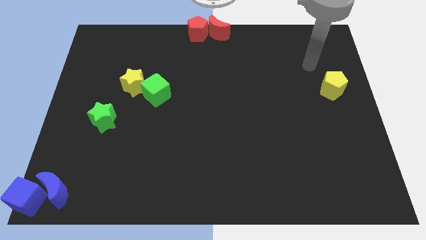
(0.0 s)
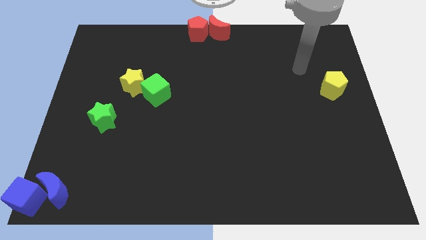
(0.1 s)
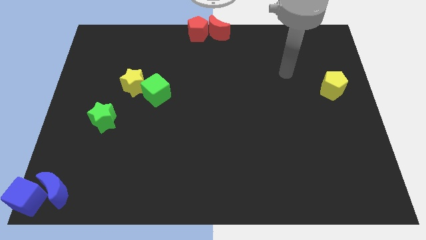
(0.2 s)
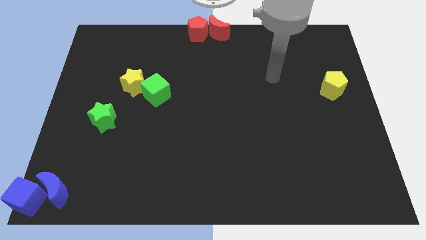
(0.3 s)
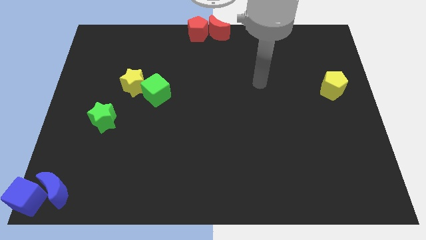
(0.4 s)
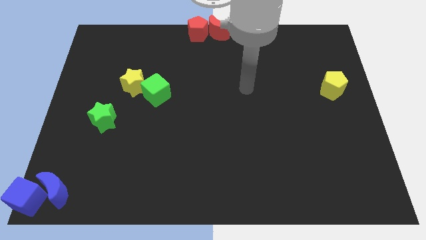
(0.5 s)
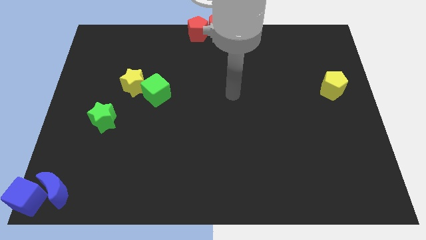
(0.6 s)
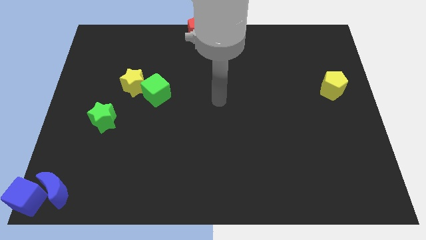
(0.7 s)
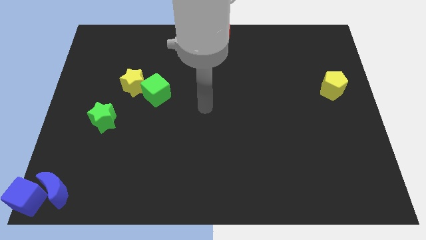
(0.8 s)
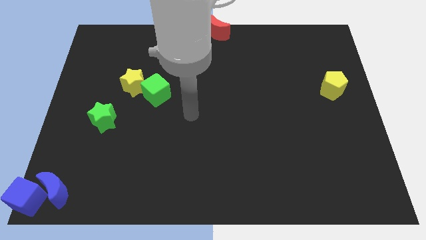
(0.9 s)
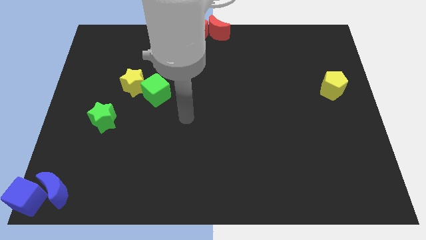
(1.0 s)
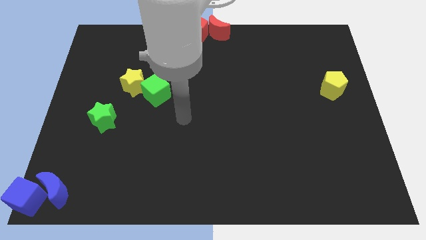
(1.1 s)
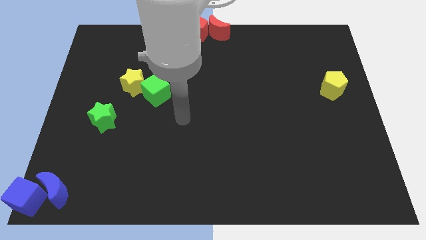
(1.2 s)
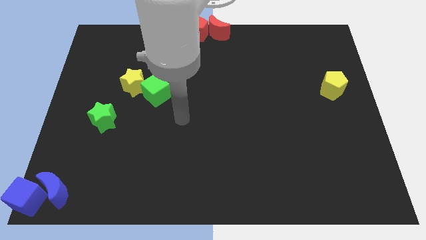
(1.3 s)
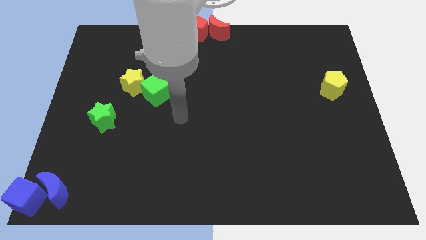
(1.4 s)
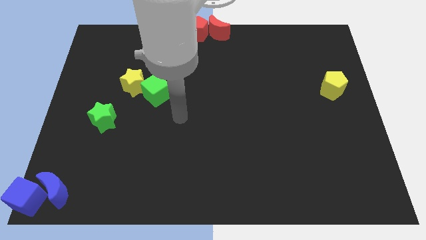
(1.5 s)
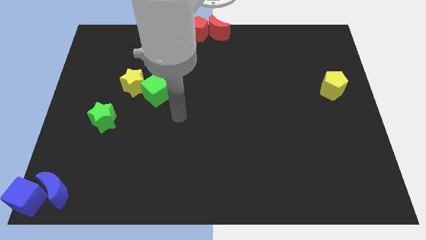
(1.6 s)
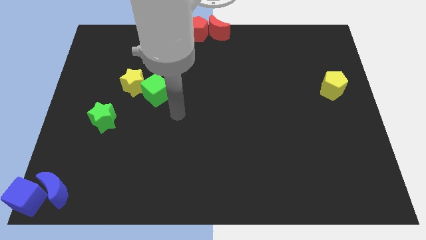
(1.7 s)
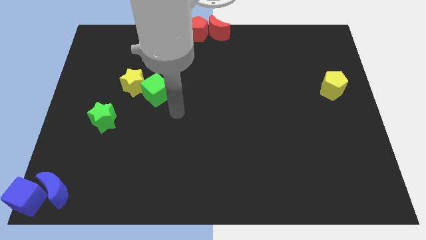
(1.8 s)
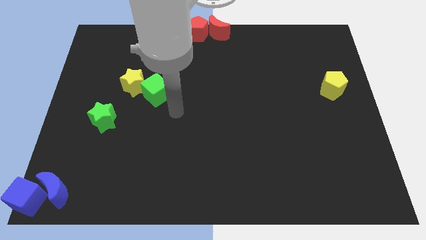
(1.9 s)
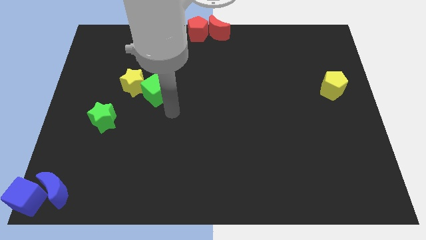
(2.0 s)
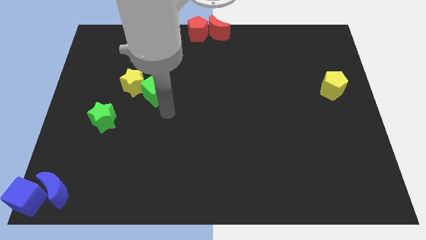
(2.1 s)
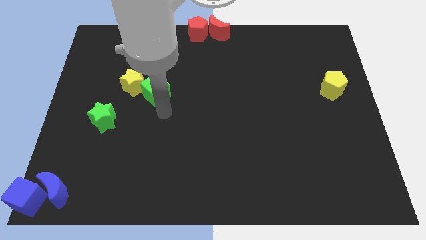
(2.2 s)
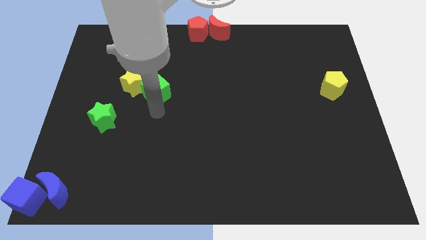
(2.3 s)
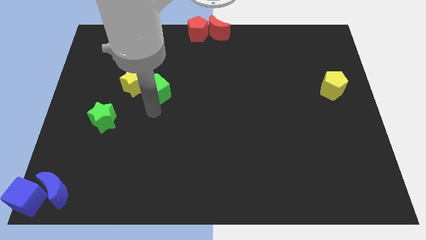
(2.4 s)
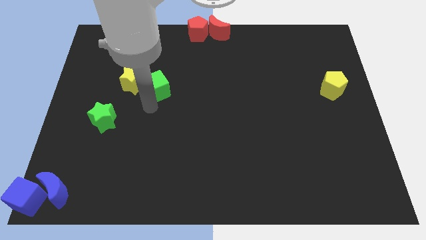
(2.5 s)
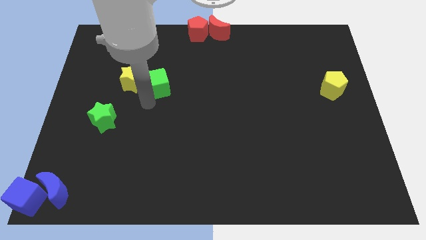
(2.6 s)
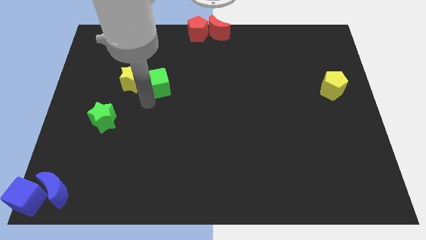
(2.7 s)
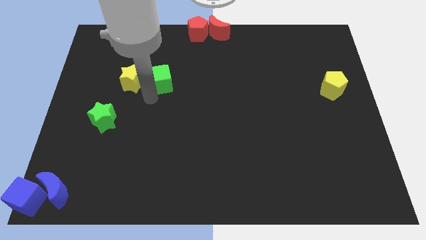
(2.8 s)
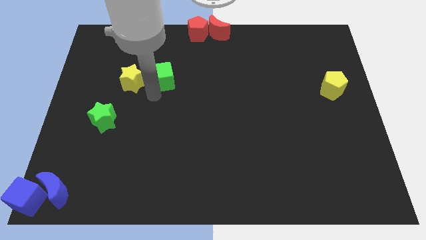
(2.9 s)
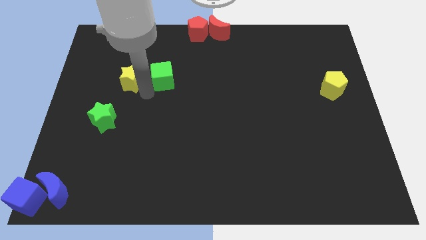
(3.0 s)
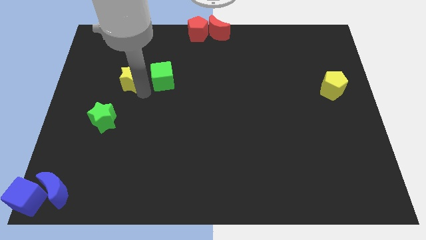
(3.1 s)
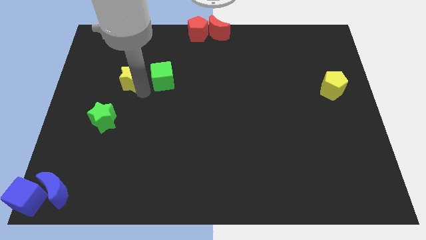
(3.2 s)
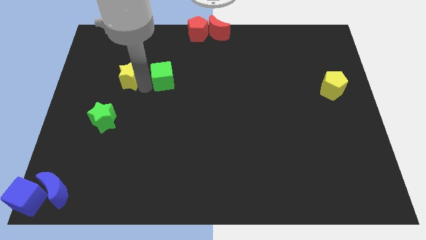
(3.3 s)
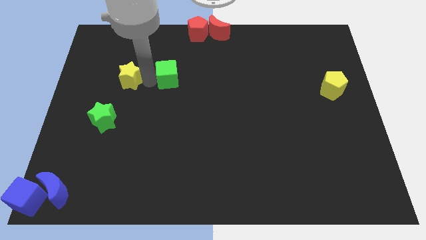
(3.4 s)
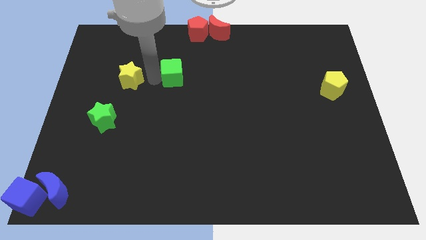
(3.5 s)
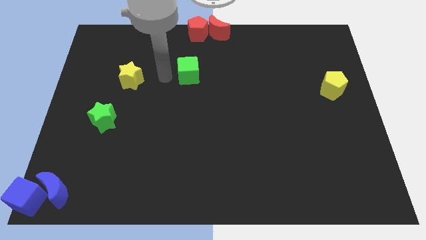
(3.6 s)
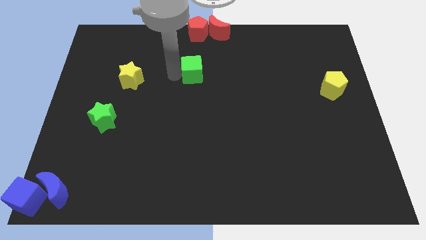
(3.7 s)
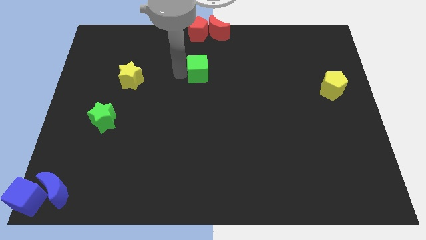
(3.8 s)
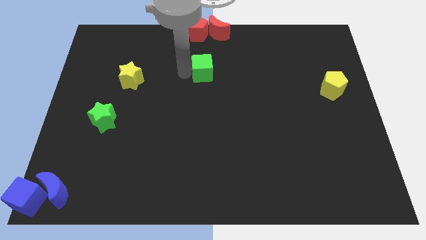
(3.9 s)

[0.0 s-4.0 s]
push green cube below red pentagon

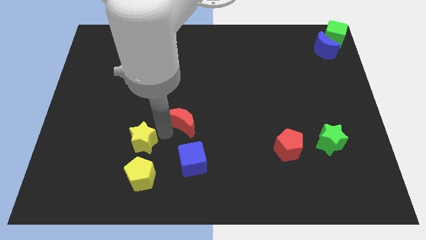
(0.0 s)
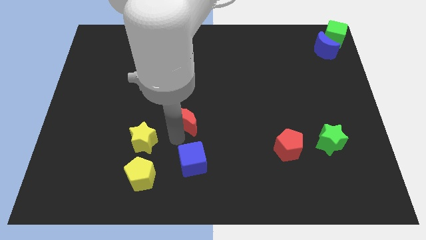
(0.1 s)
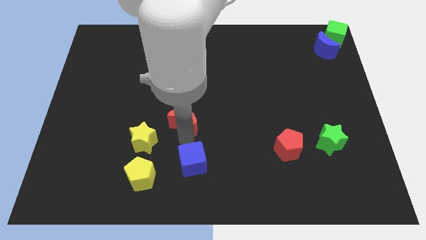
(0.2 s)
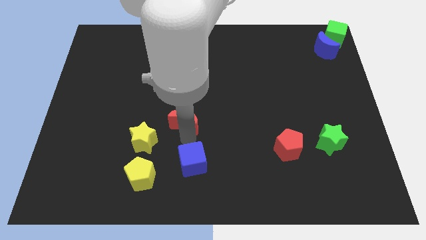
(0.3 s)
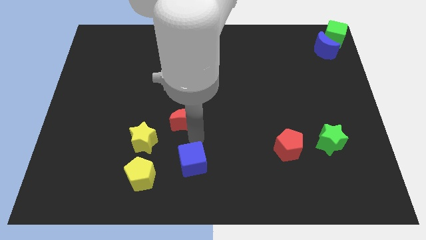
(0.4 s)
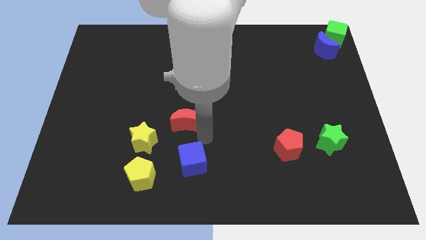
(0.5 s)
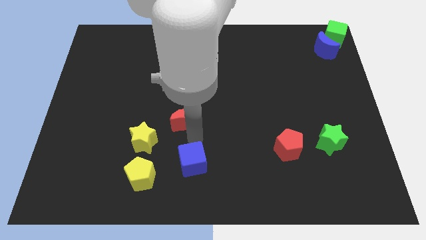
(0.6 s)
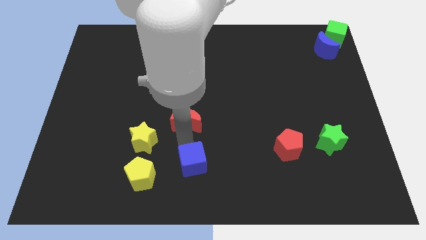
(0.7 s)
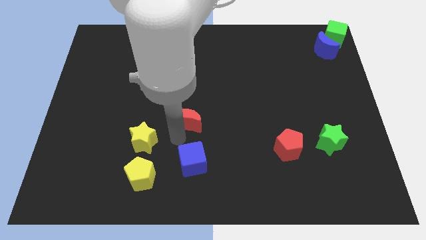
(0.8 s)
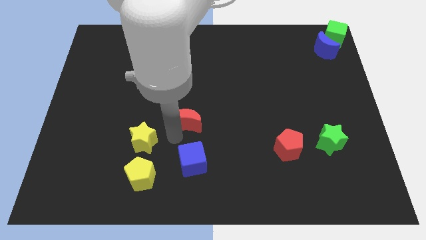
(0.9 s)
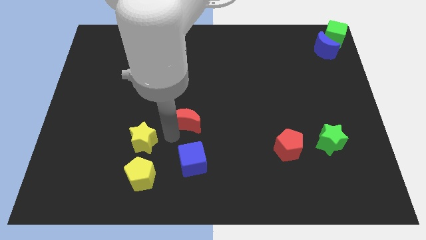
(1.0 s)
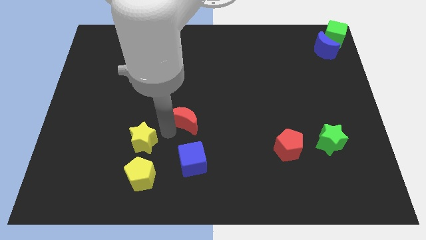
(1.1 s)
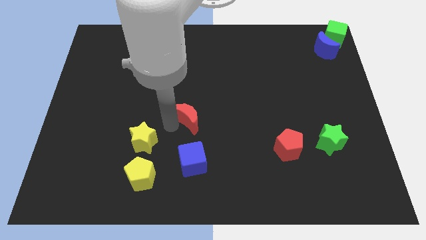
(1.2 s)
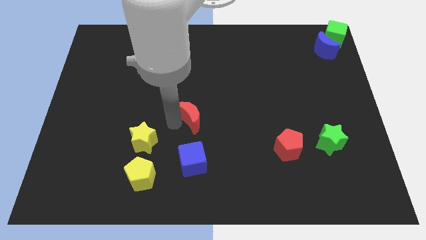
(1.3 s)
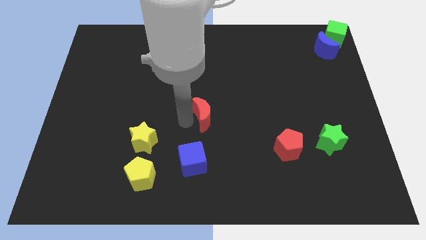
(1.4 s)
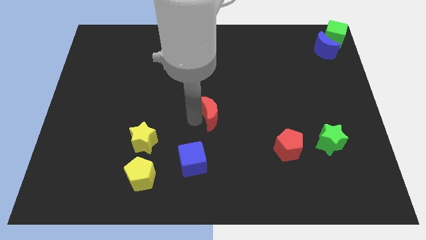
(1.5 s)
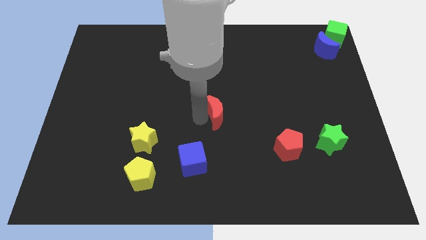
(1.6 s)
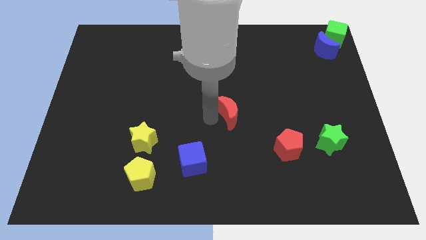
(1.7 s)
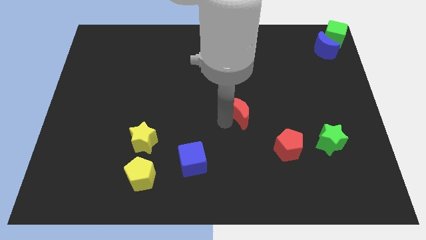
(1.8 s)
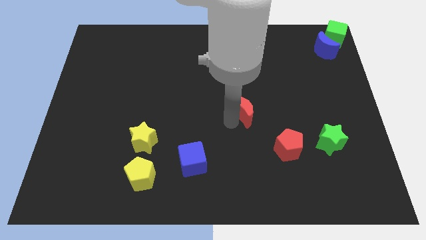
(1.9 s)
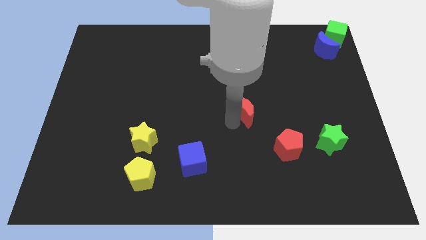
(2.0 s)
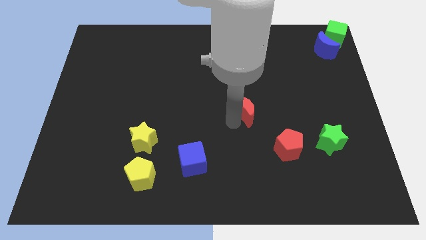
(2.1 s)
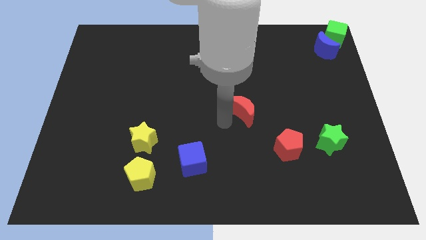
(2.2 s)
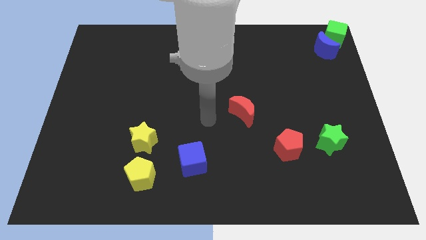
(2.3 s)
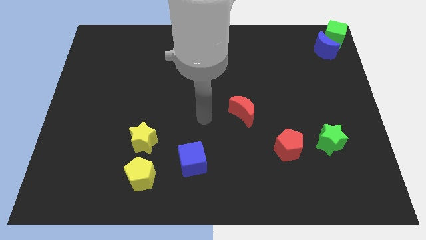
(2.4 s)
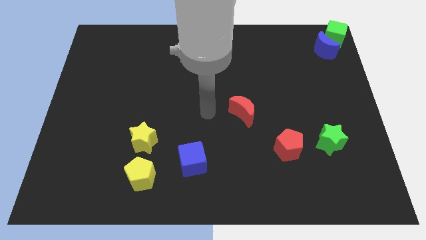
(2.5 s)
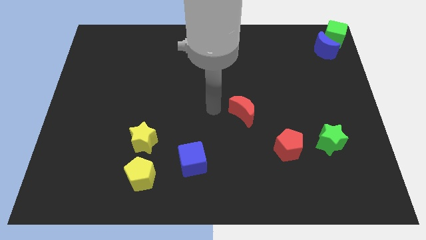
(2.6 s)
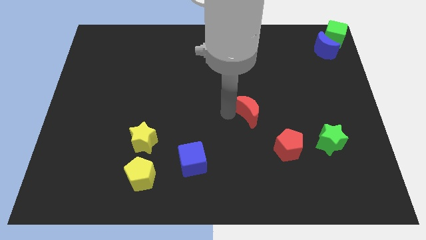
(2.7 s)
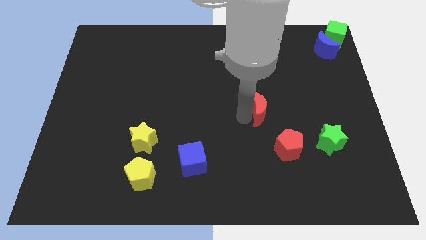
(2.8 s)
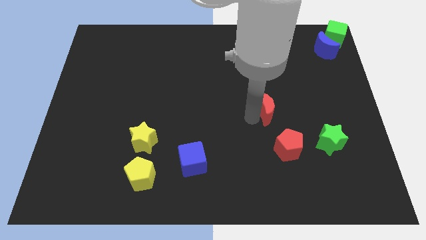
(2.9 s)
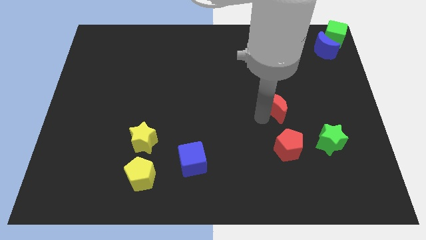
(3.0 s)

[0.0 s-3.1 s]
move the red crescent above the red pentagon

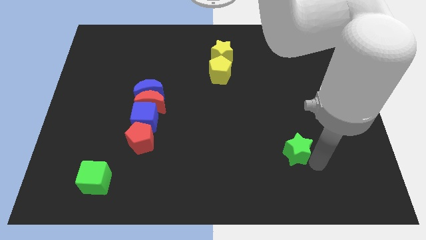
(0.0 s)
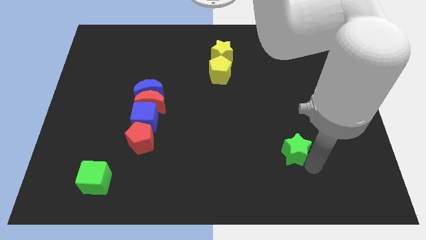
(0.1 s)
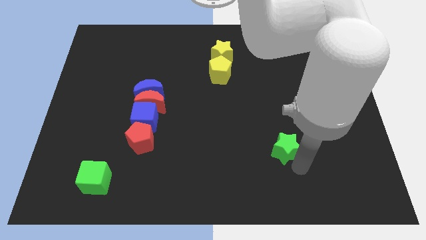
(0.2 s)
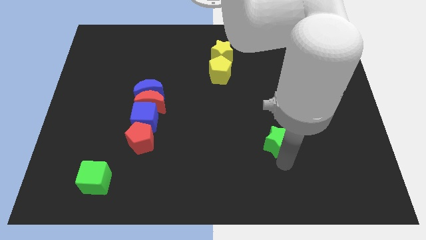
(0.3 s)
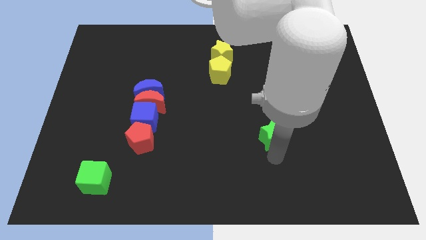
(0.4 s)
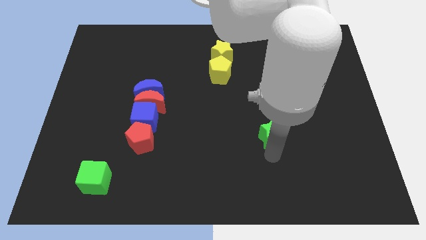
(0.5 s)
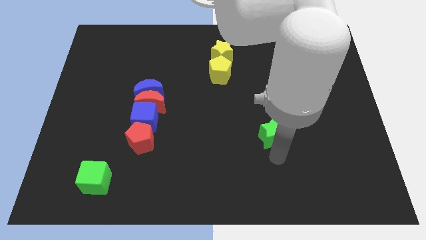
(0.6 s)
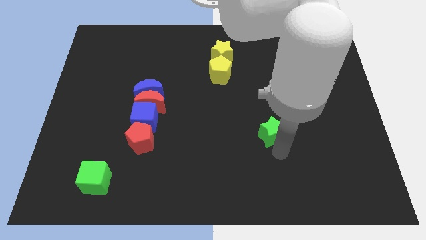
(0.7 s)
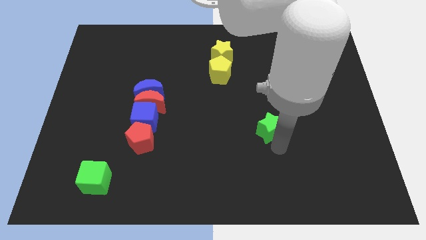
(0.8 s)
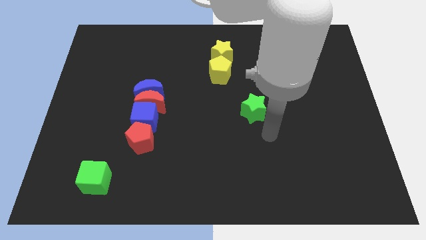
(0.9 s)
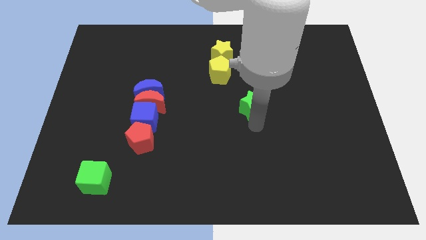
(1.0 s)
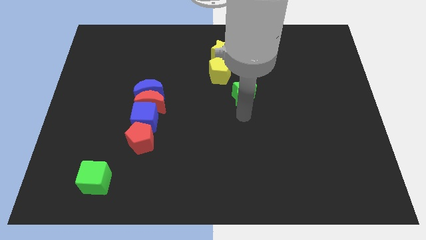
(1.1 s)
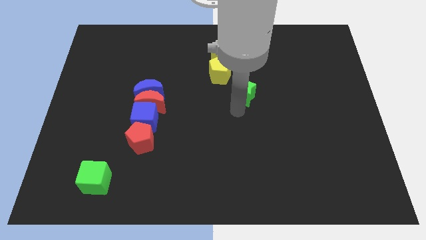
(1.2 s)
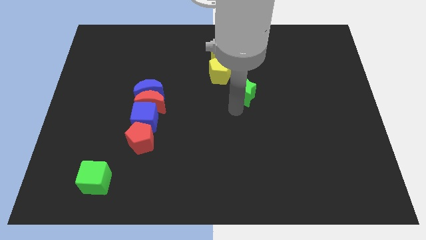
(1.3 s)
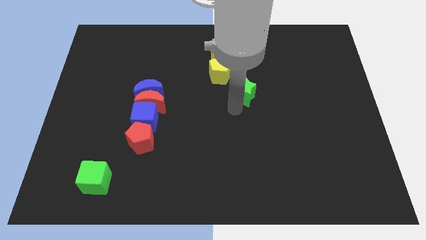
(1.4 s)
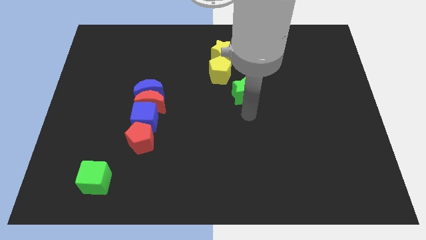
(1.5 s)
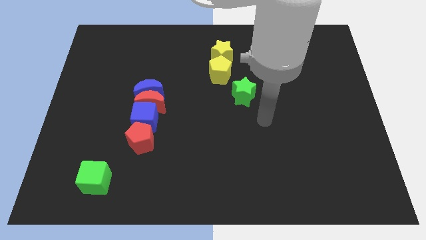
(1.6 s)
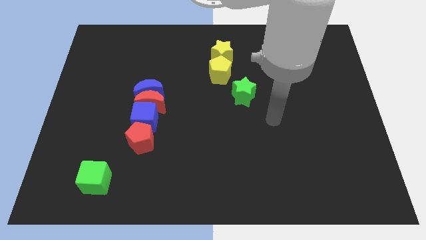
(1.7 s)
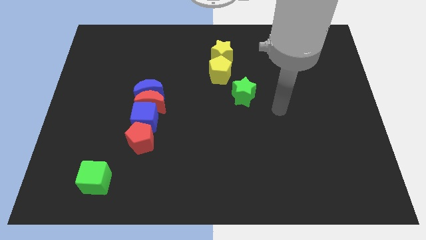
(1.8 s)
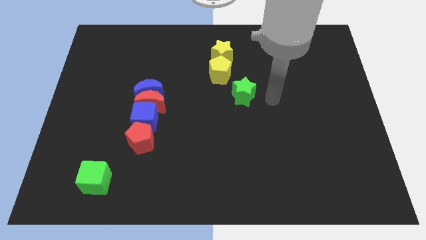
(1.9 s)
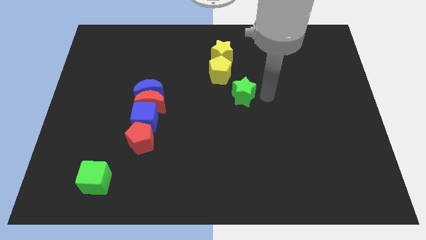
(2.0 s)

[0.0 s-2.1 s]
push green star towards yellow pentagon
